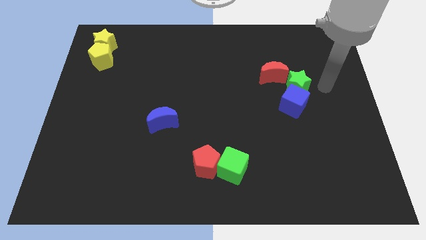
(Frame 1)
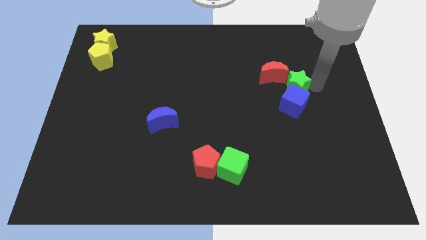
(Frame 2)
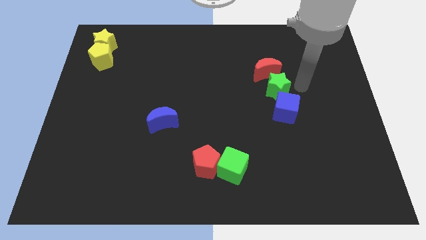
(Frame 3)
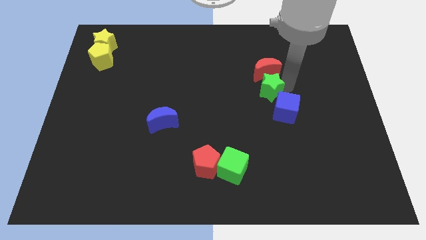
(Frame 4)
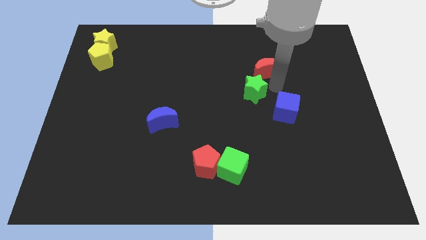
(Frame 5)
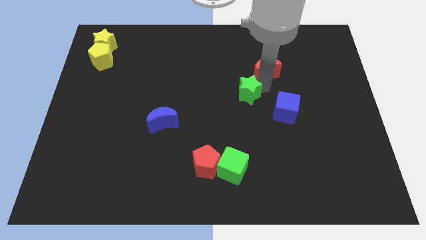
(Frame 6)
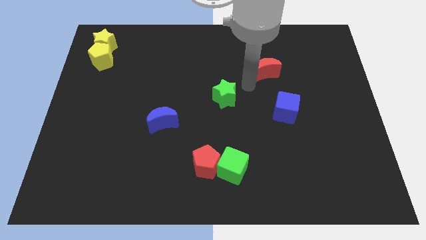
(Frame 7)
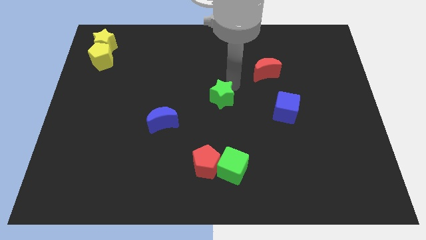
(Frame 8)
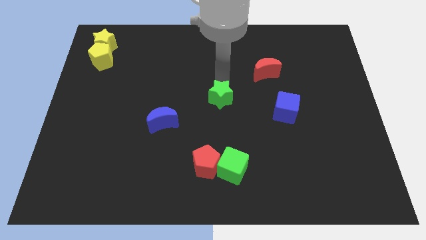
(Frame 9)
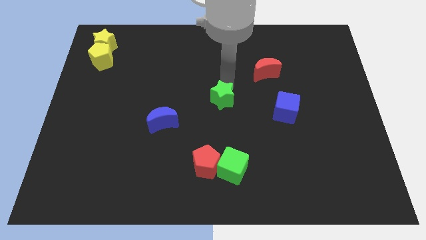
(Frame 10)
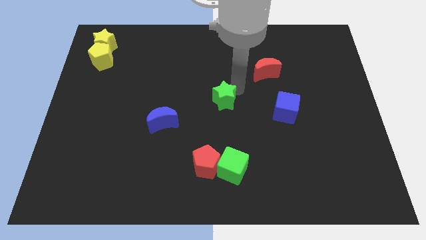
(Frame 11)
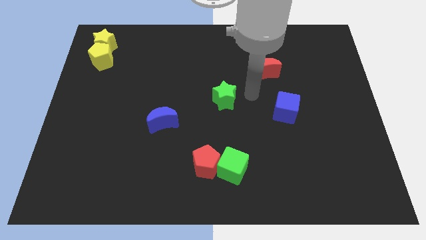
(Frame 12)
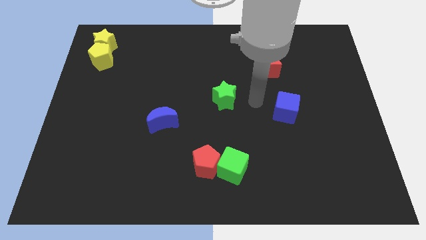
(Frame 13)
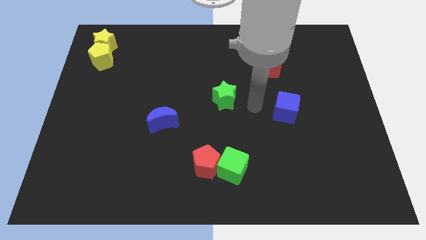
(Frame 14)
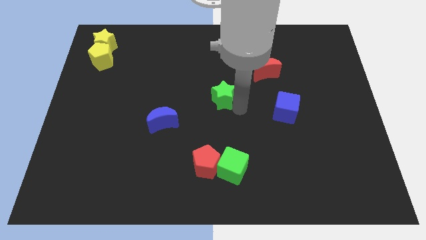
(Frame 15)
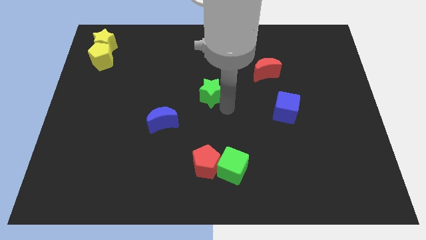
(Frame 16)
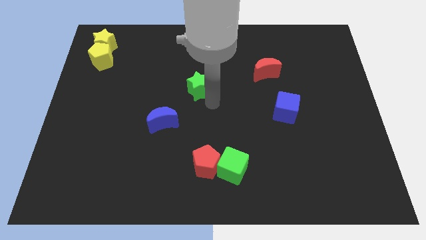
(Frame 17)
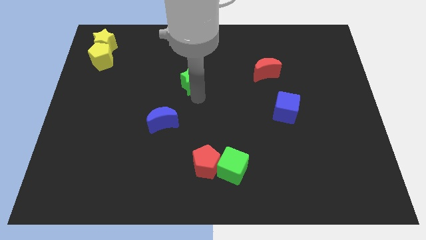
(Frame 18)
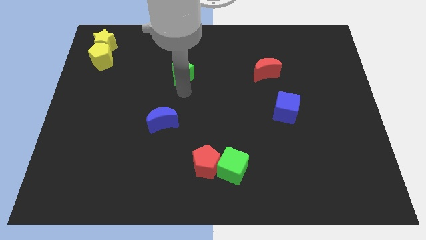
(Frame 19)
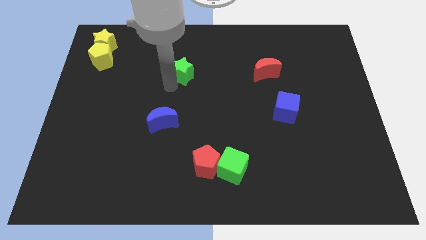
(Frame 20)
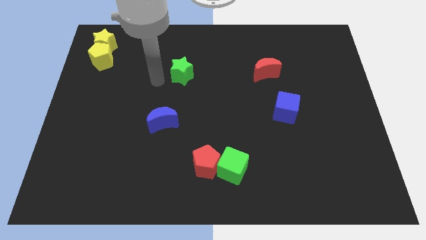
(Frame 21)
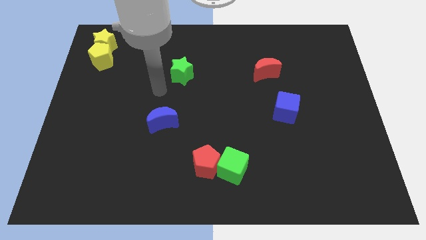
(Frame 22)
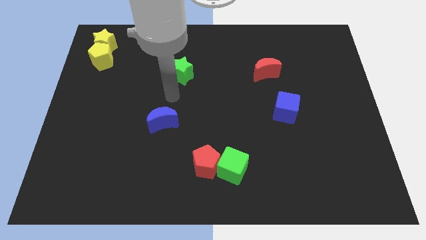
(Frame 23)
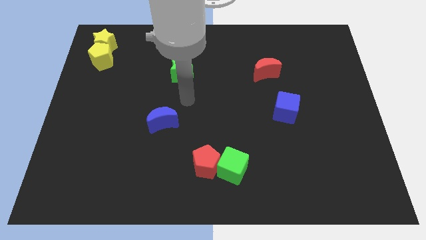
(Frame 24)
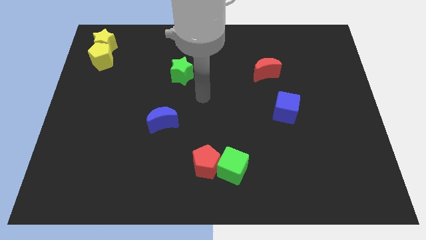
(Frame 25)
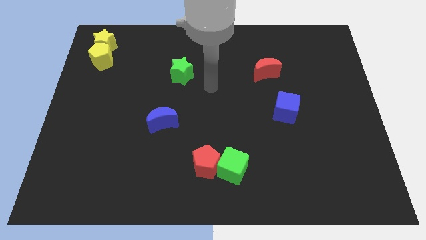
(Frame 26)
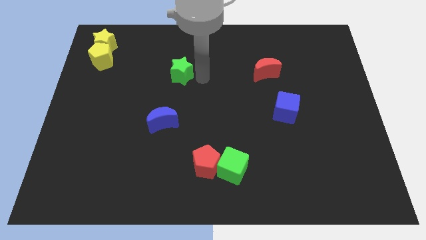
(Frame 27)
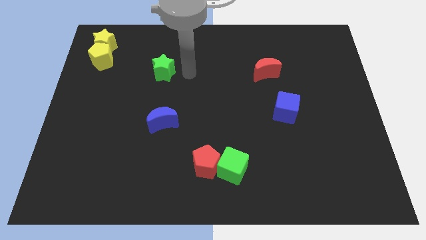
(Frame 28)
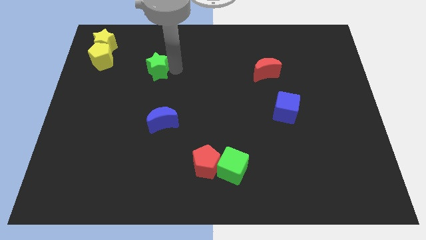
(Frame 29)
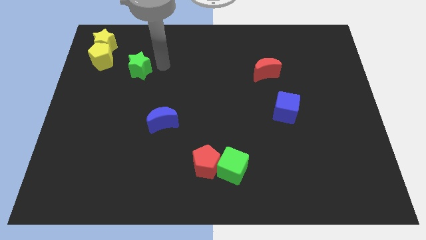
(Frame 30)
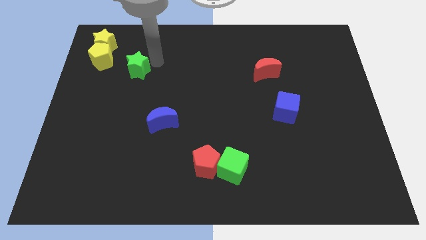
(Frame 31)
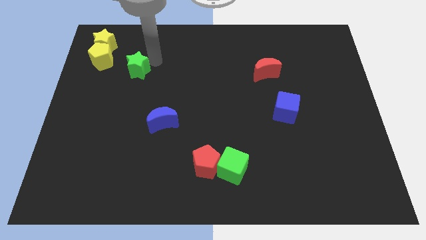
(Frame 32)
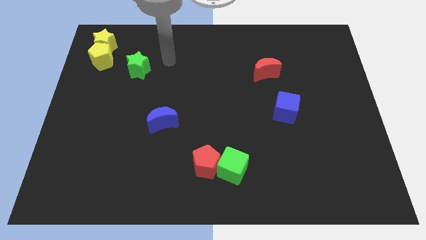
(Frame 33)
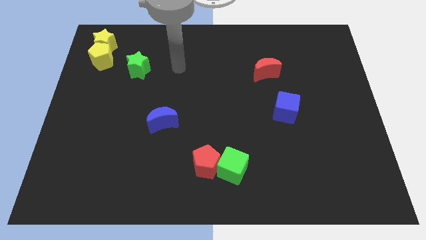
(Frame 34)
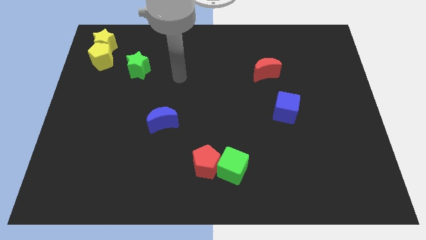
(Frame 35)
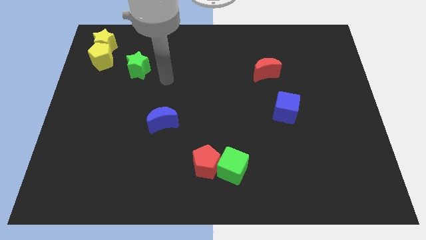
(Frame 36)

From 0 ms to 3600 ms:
push the green star to the top left of the board

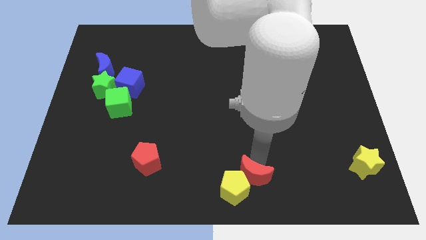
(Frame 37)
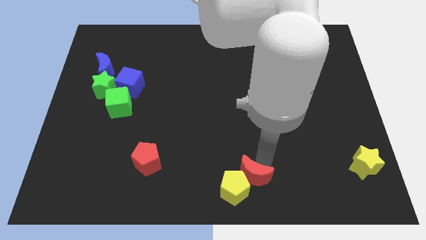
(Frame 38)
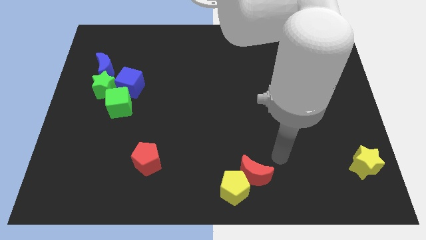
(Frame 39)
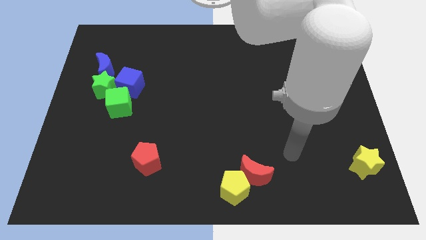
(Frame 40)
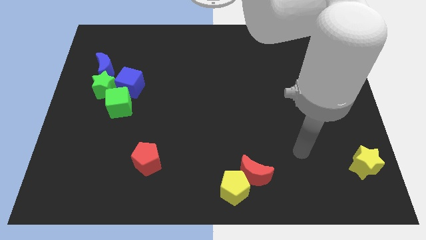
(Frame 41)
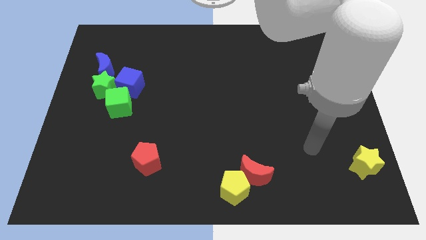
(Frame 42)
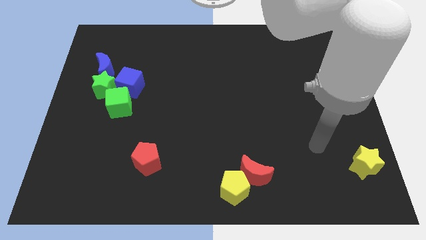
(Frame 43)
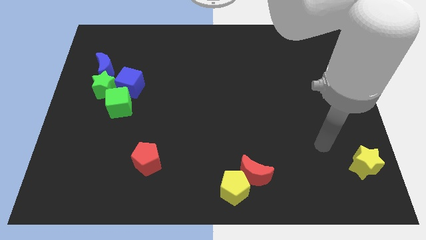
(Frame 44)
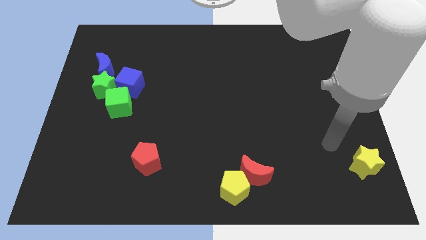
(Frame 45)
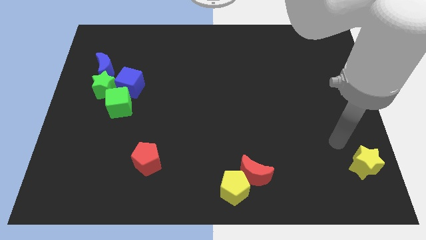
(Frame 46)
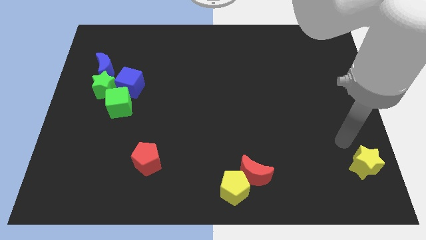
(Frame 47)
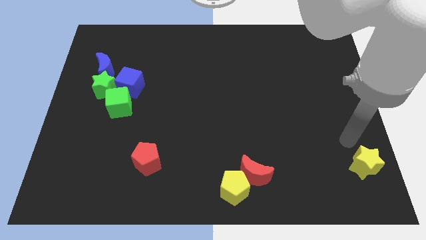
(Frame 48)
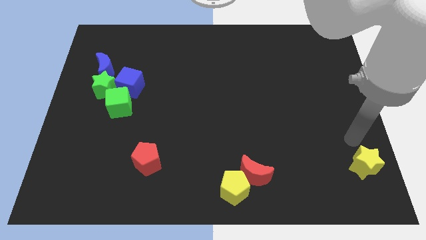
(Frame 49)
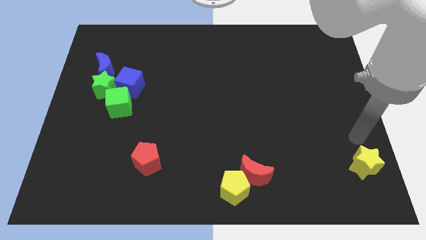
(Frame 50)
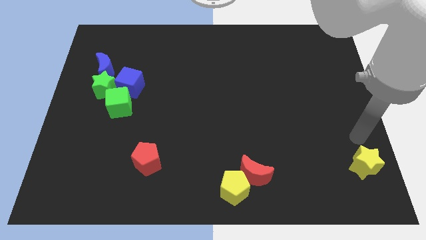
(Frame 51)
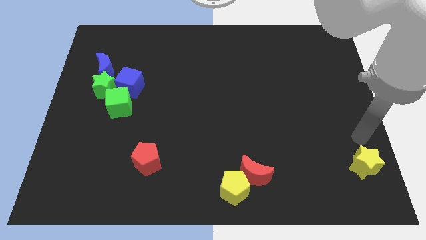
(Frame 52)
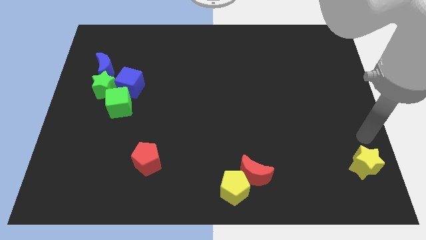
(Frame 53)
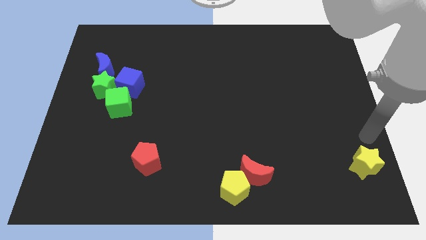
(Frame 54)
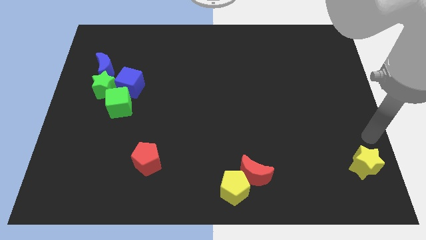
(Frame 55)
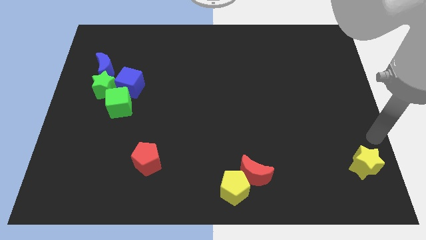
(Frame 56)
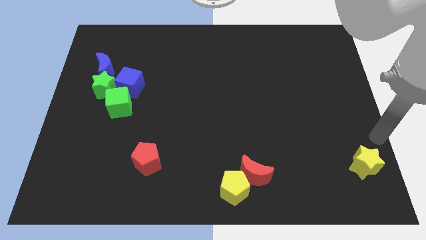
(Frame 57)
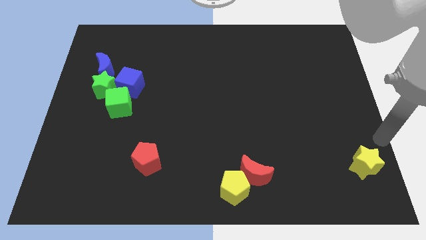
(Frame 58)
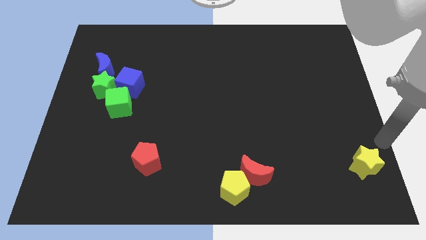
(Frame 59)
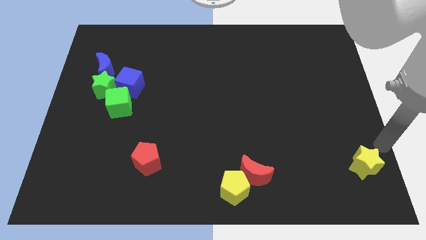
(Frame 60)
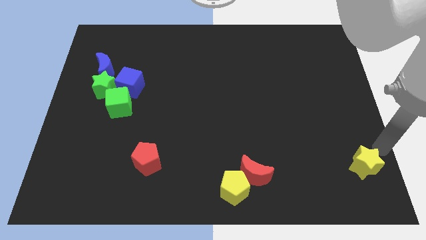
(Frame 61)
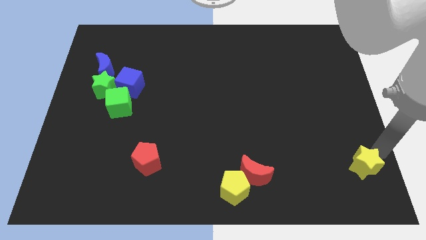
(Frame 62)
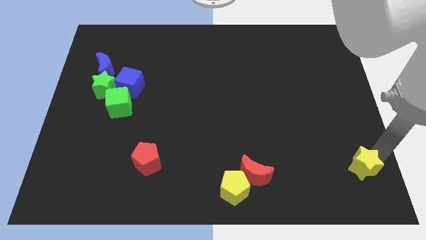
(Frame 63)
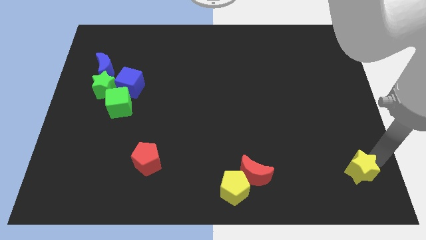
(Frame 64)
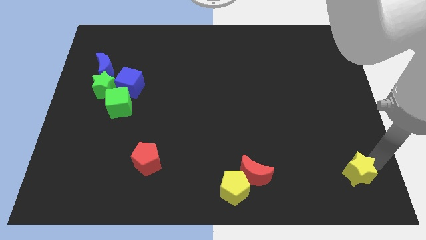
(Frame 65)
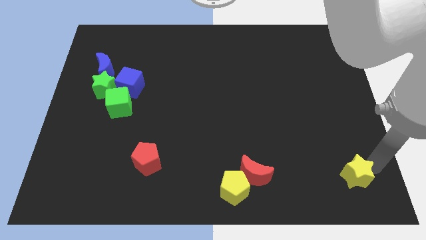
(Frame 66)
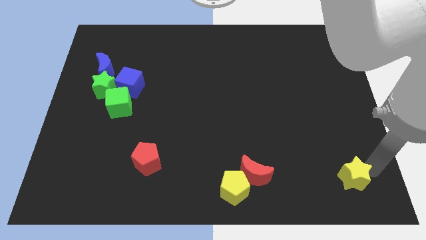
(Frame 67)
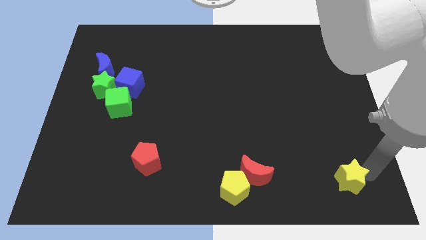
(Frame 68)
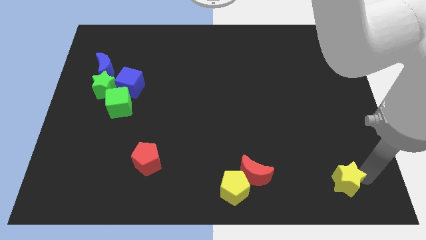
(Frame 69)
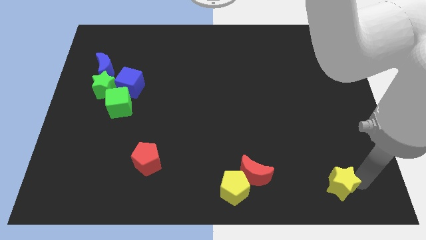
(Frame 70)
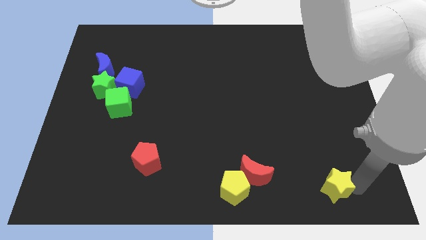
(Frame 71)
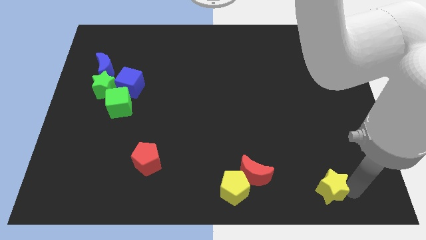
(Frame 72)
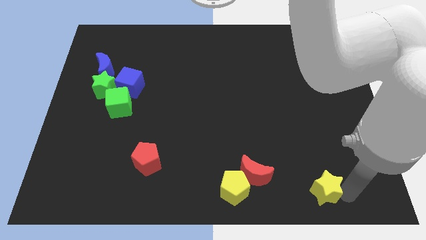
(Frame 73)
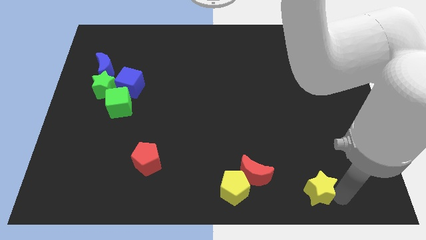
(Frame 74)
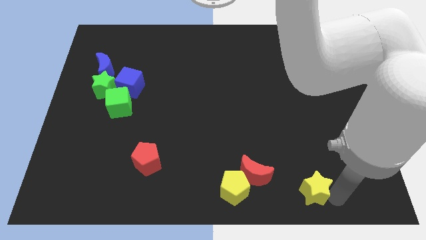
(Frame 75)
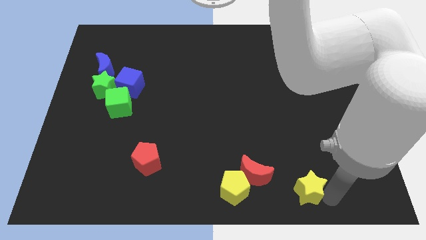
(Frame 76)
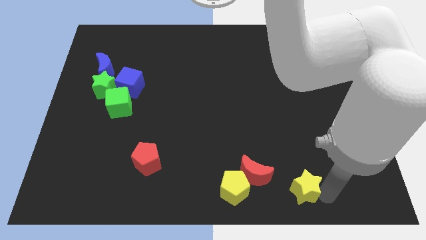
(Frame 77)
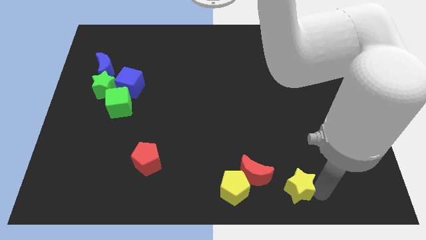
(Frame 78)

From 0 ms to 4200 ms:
move the yellow star to the right of the yellow pentagon

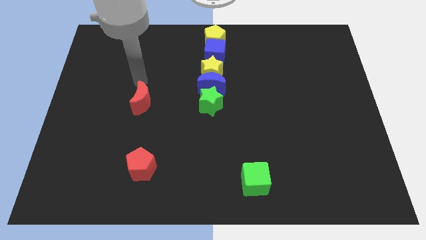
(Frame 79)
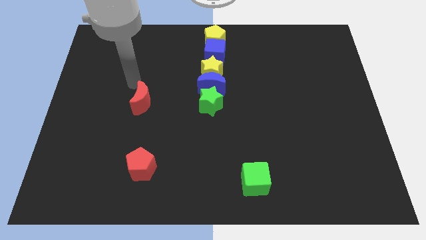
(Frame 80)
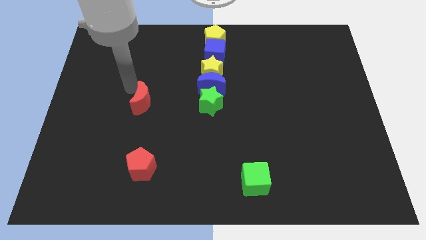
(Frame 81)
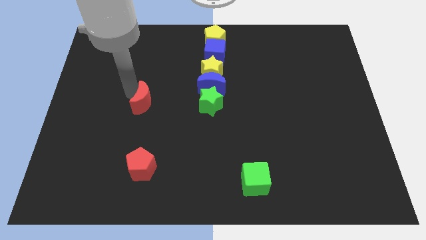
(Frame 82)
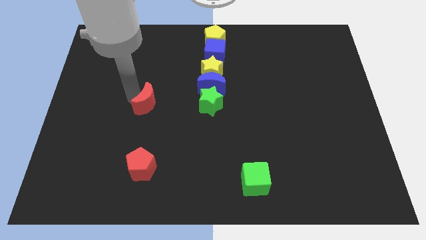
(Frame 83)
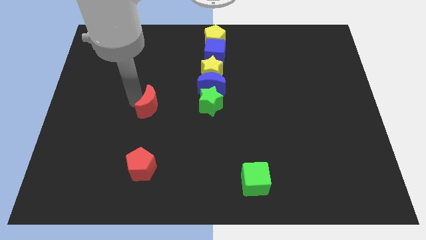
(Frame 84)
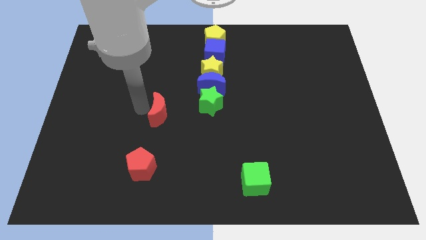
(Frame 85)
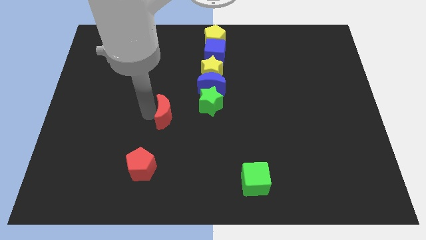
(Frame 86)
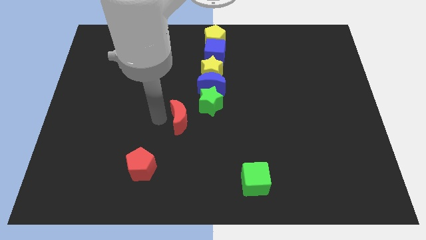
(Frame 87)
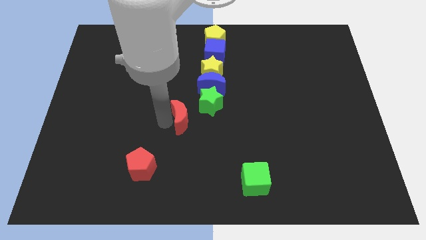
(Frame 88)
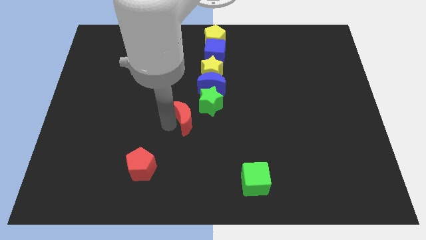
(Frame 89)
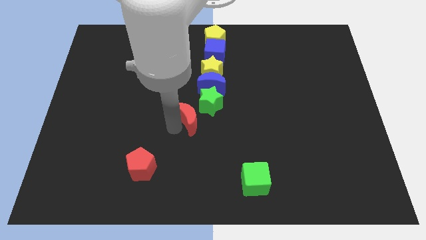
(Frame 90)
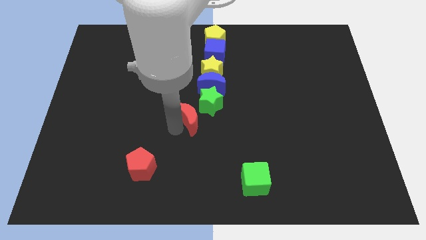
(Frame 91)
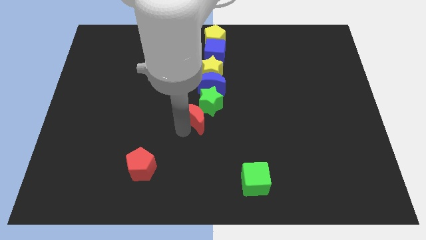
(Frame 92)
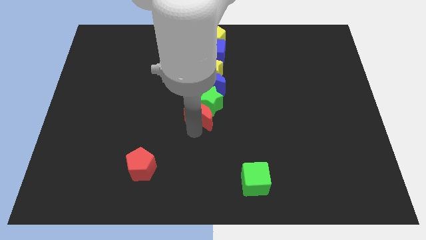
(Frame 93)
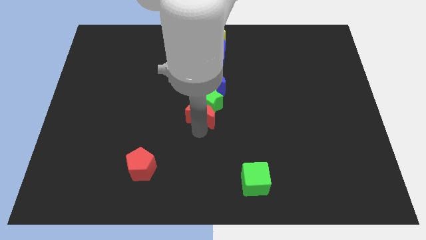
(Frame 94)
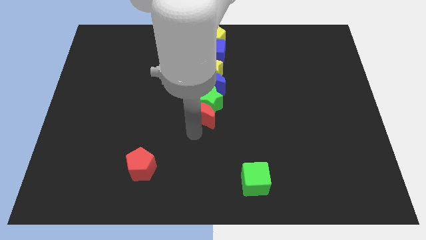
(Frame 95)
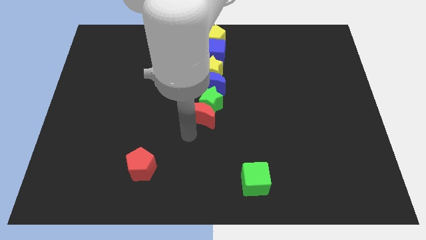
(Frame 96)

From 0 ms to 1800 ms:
move the red moon below the green star
